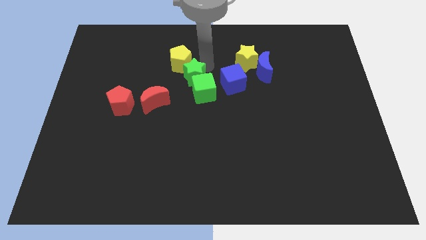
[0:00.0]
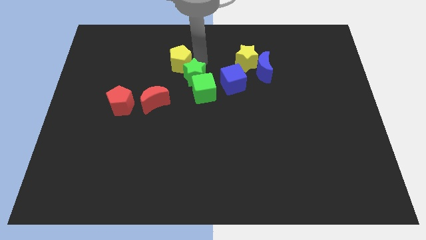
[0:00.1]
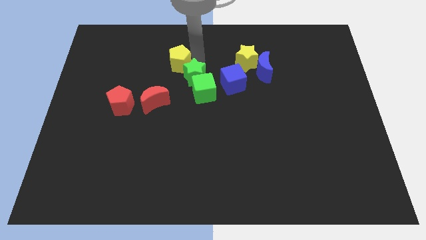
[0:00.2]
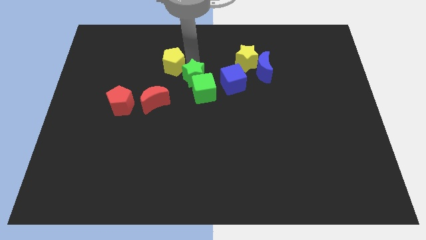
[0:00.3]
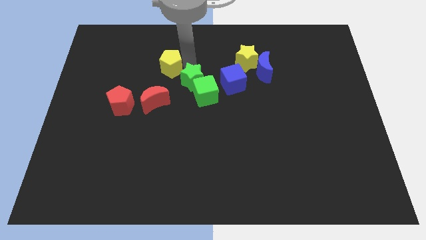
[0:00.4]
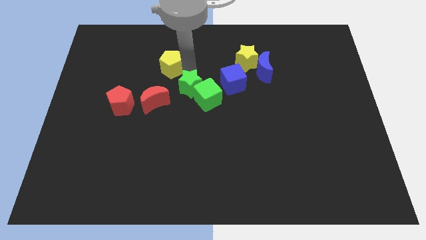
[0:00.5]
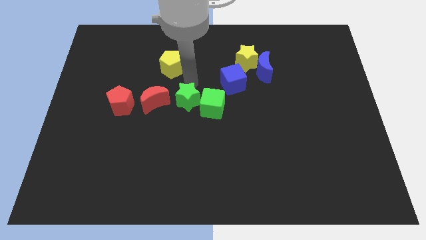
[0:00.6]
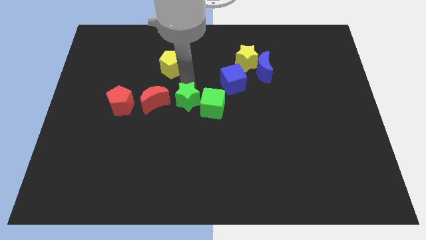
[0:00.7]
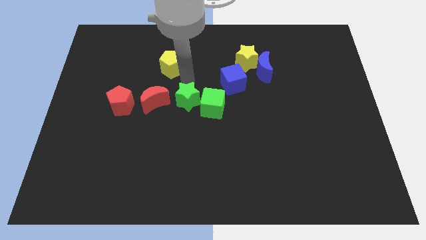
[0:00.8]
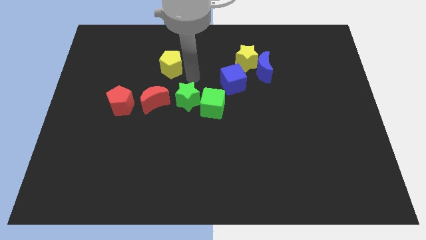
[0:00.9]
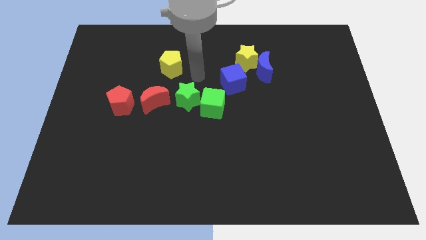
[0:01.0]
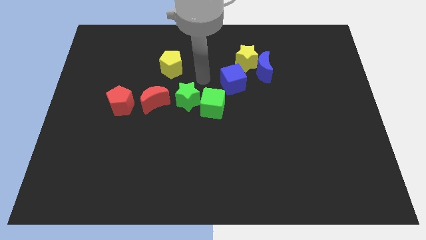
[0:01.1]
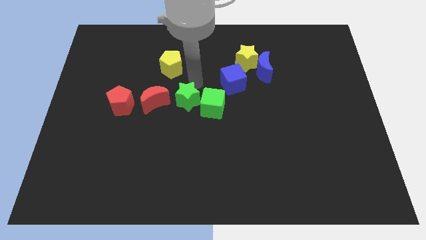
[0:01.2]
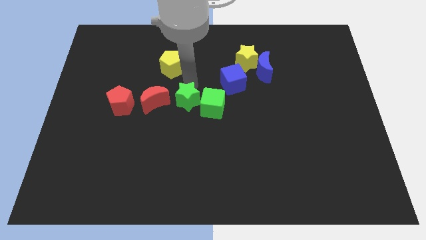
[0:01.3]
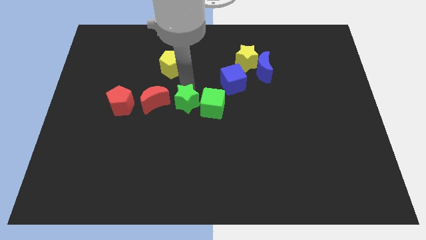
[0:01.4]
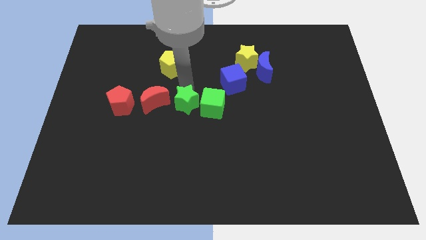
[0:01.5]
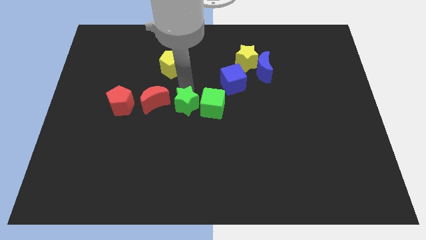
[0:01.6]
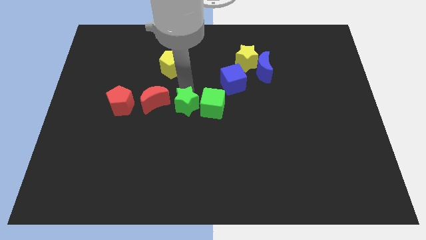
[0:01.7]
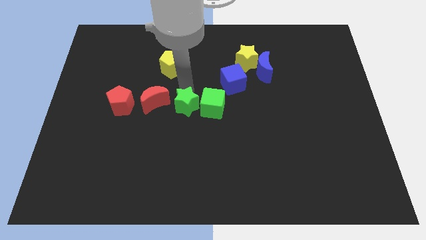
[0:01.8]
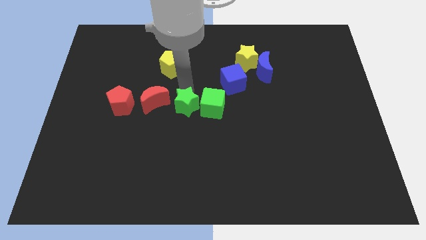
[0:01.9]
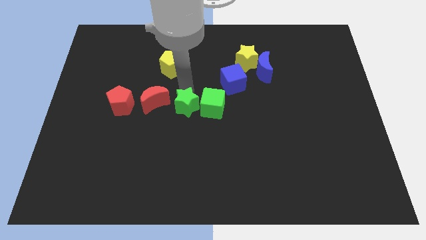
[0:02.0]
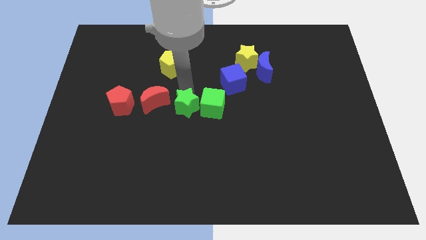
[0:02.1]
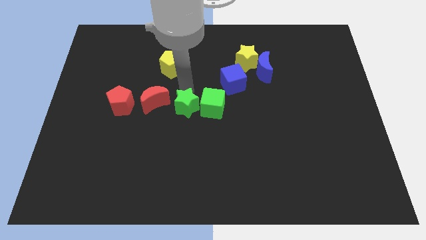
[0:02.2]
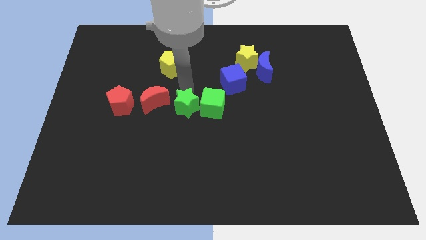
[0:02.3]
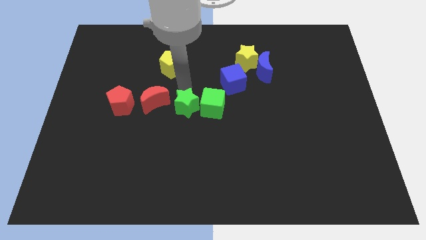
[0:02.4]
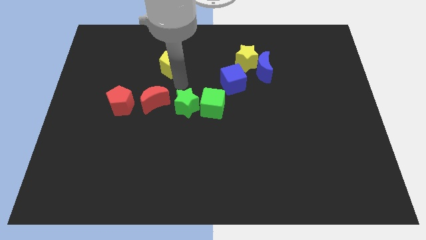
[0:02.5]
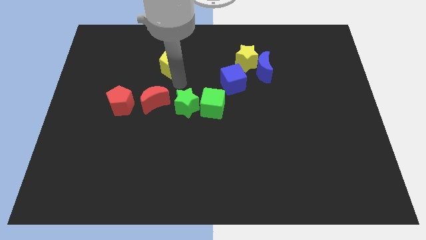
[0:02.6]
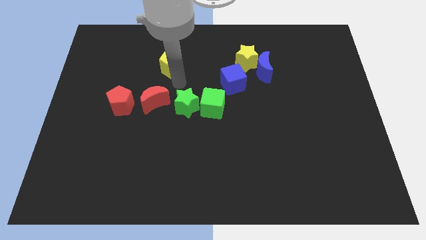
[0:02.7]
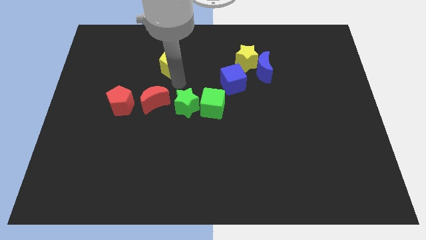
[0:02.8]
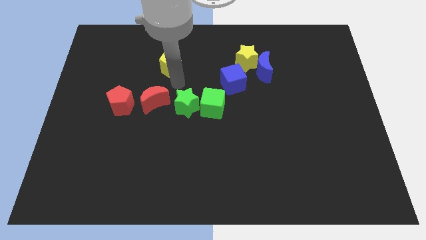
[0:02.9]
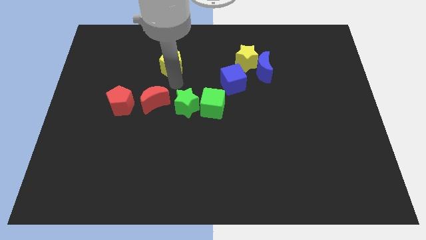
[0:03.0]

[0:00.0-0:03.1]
place the green blocks in a horizontal line towards the right of the red moon

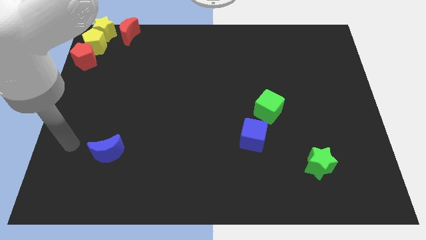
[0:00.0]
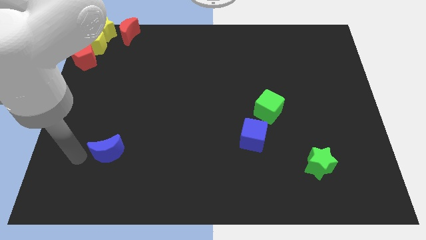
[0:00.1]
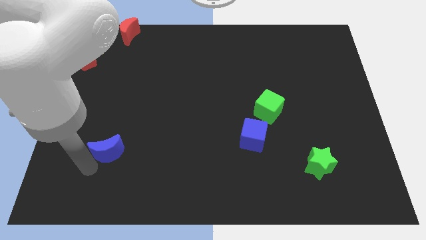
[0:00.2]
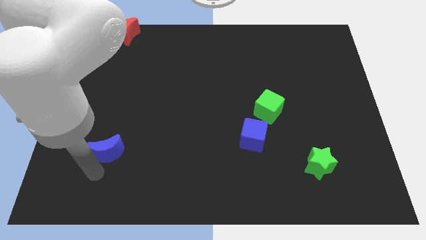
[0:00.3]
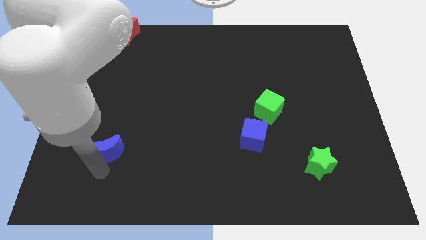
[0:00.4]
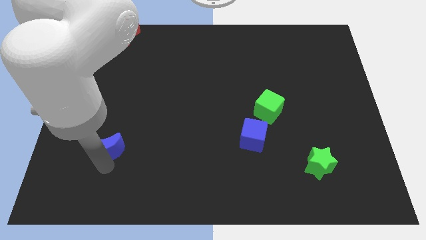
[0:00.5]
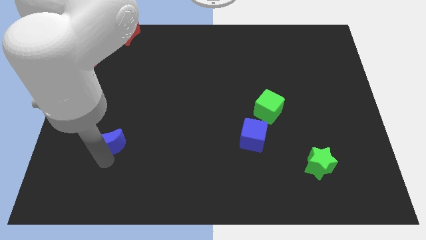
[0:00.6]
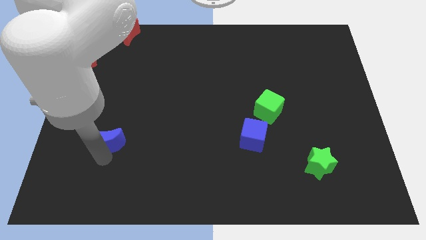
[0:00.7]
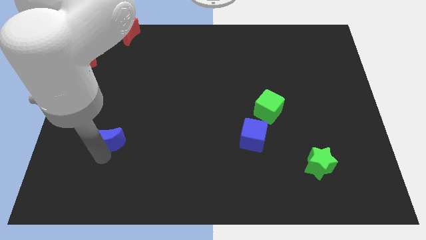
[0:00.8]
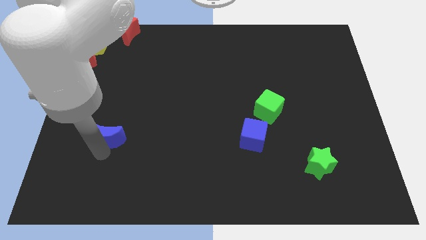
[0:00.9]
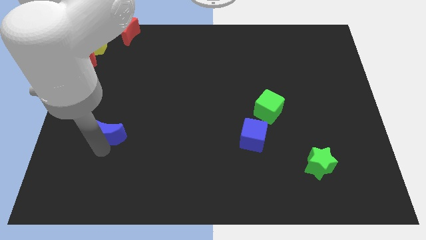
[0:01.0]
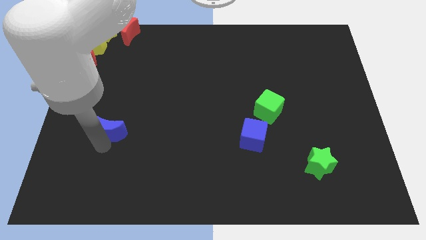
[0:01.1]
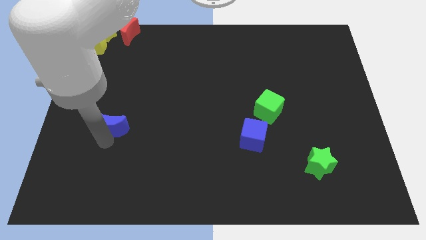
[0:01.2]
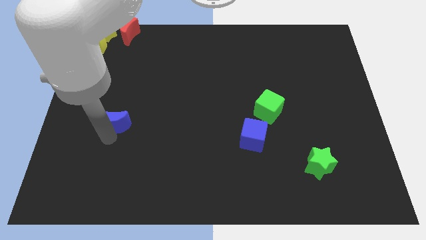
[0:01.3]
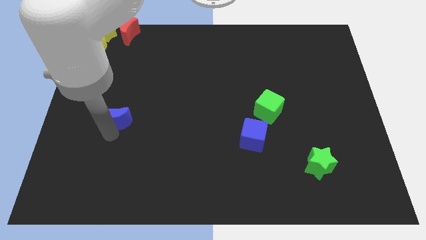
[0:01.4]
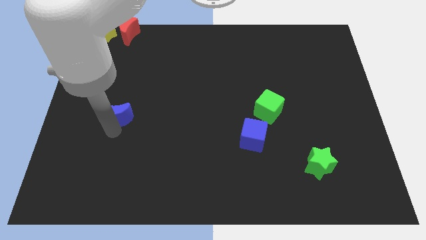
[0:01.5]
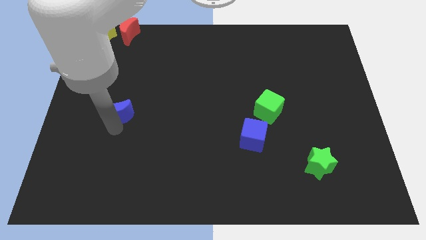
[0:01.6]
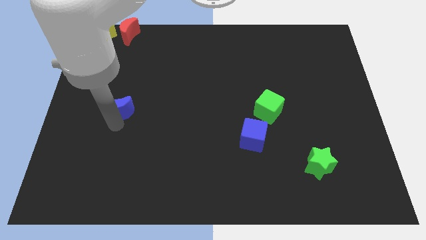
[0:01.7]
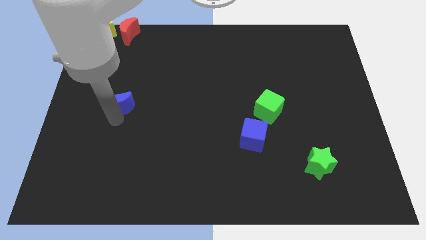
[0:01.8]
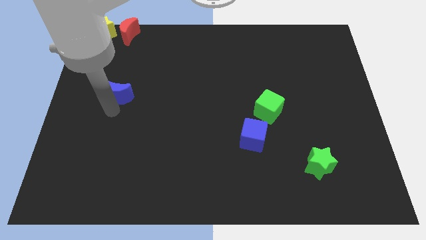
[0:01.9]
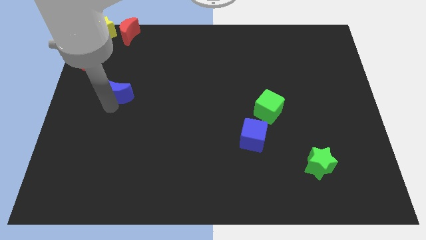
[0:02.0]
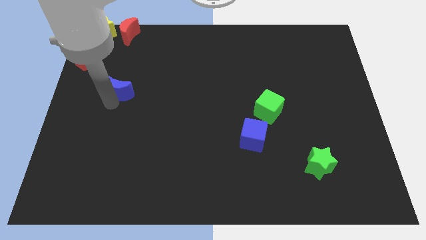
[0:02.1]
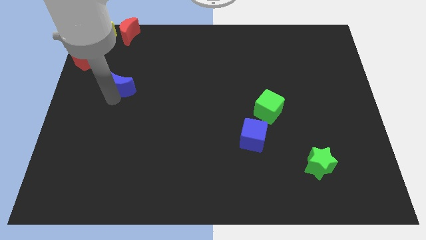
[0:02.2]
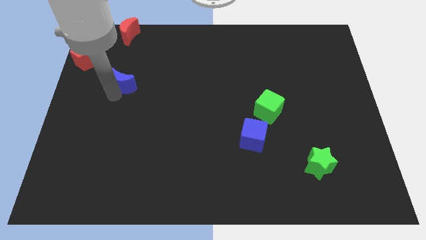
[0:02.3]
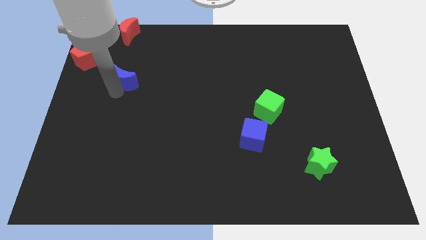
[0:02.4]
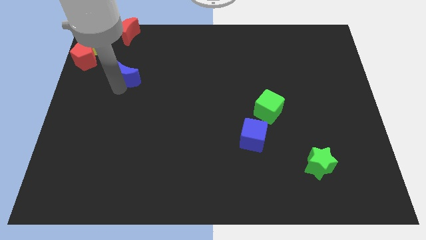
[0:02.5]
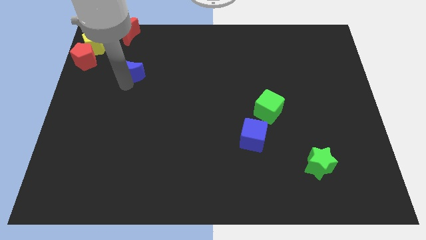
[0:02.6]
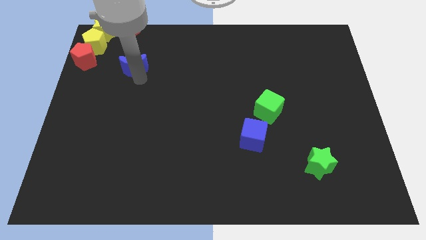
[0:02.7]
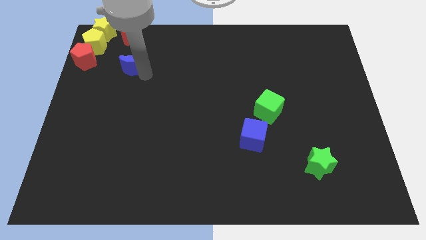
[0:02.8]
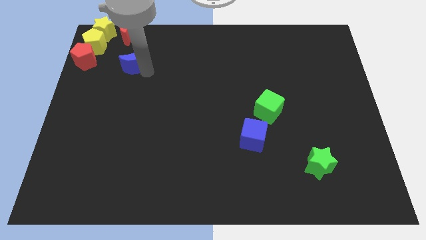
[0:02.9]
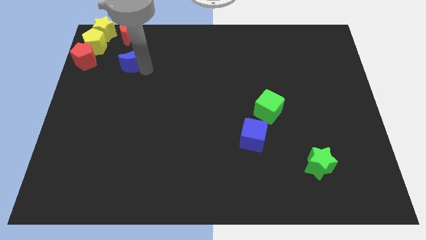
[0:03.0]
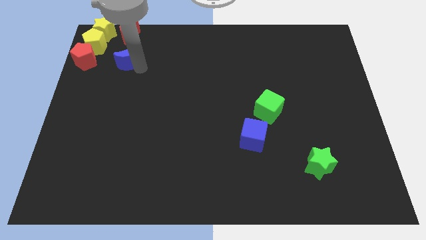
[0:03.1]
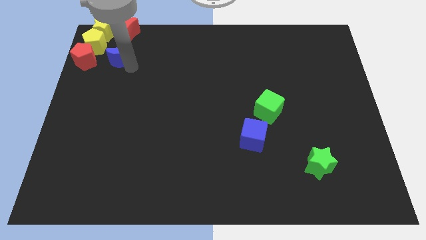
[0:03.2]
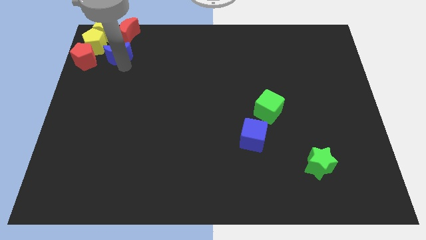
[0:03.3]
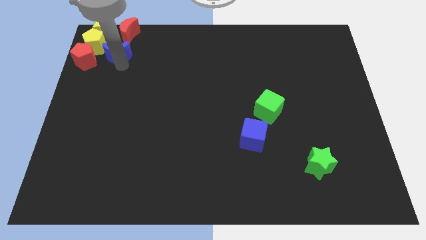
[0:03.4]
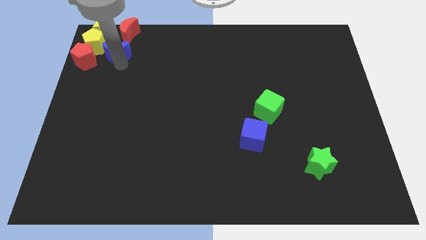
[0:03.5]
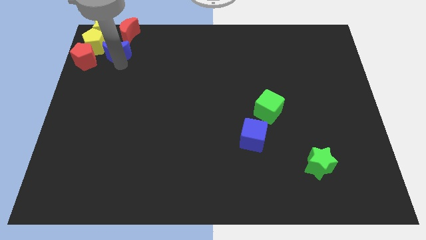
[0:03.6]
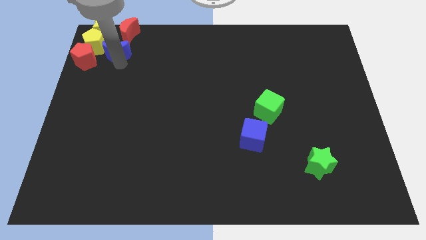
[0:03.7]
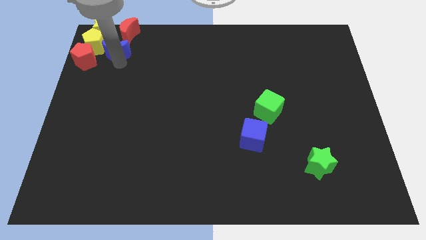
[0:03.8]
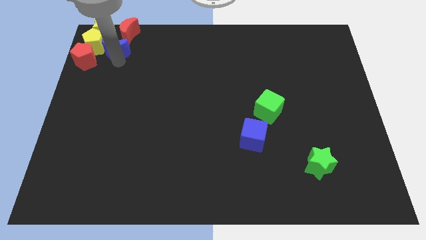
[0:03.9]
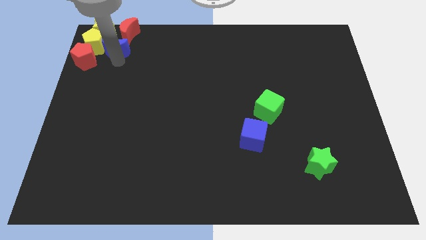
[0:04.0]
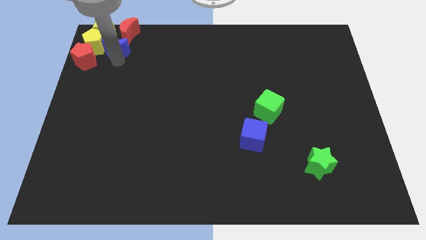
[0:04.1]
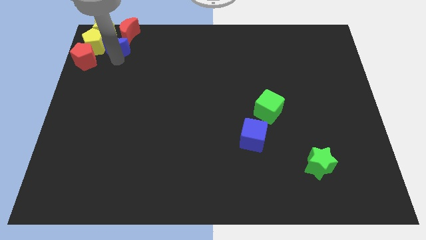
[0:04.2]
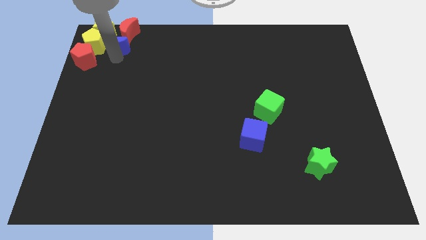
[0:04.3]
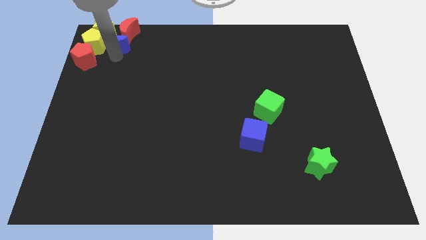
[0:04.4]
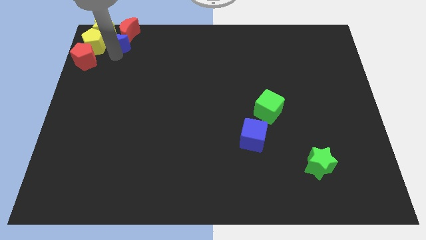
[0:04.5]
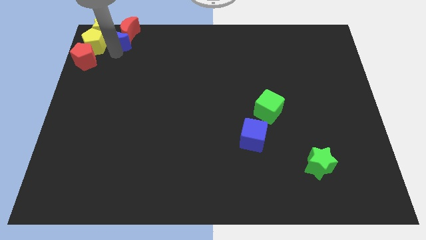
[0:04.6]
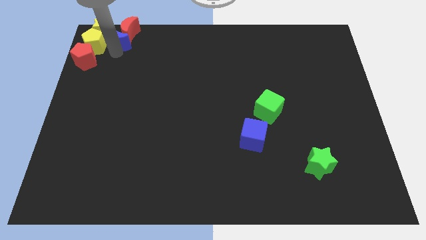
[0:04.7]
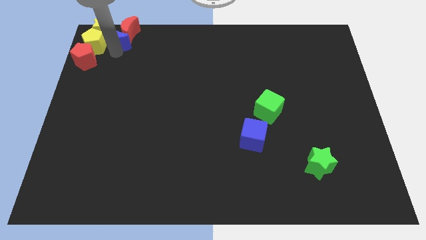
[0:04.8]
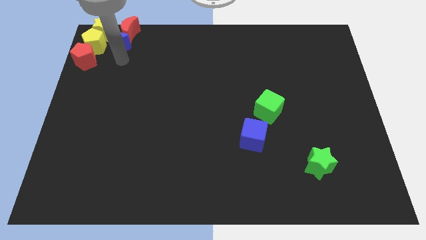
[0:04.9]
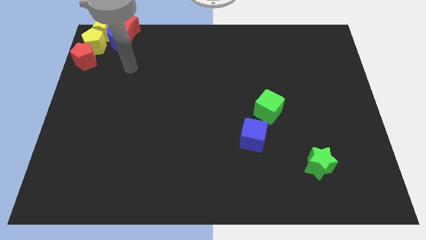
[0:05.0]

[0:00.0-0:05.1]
push the blue moon into red moon

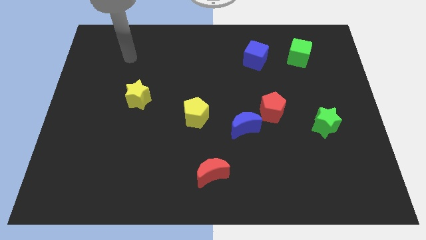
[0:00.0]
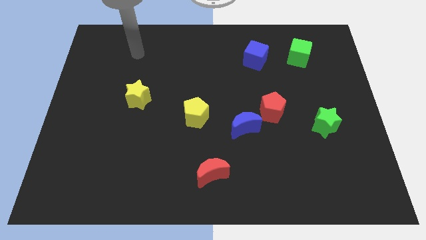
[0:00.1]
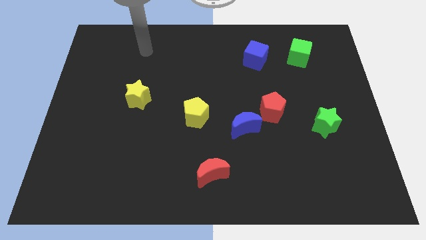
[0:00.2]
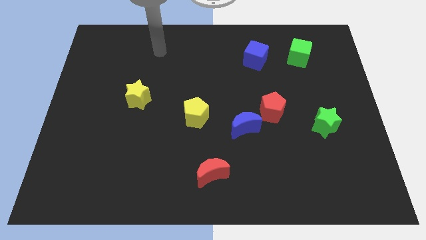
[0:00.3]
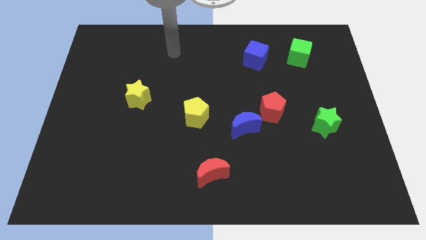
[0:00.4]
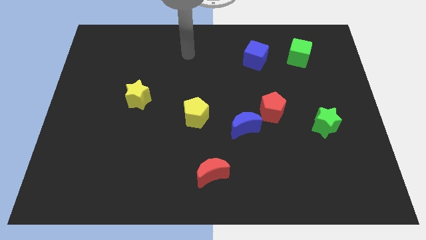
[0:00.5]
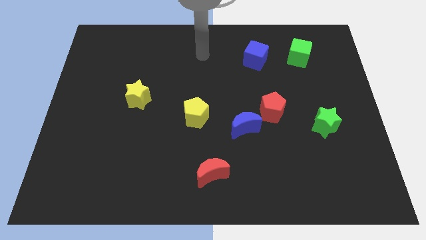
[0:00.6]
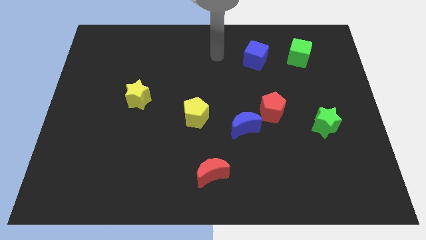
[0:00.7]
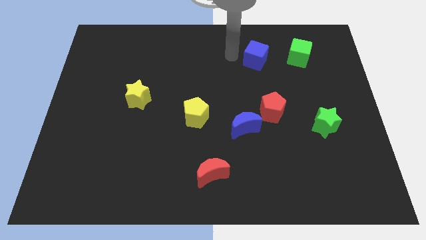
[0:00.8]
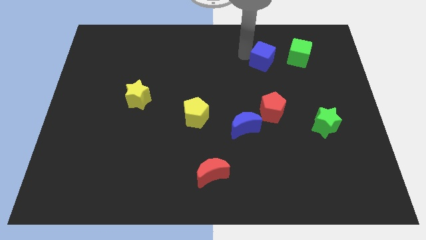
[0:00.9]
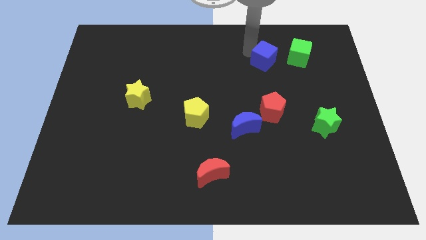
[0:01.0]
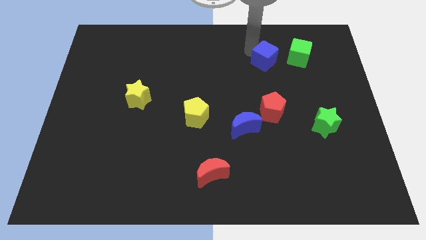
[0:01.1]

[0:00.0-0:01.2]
touch the left of the blue cube
